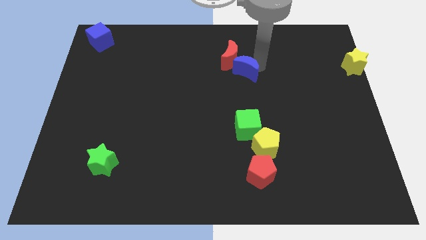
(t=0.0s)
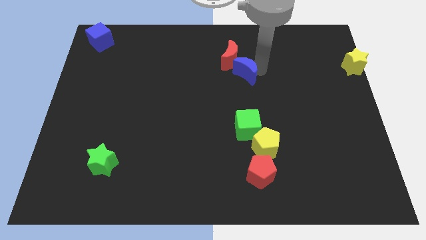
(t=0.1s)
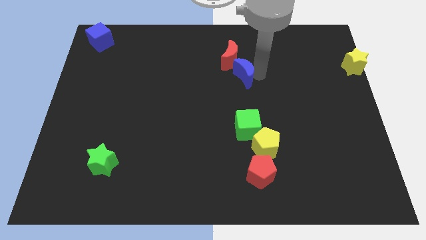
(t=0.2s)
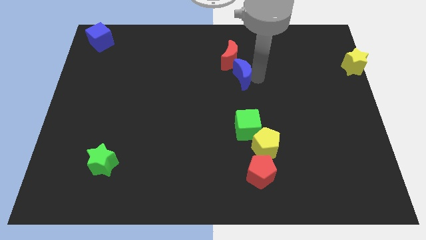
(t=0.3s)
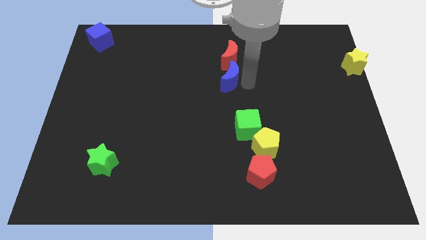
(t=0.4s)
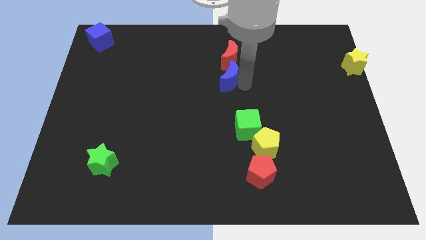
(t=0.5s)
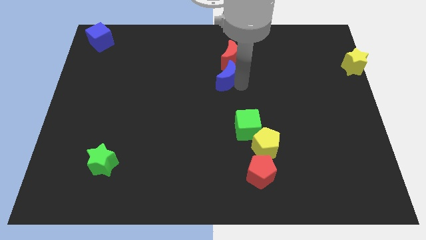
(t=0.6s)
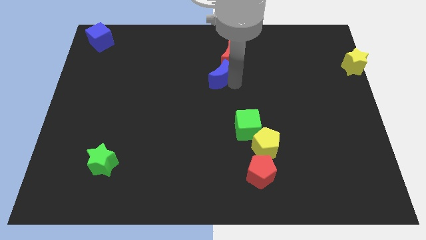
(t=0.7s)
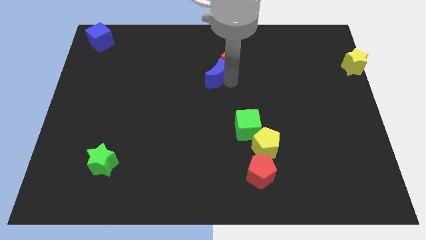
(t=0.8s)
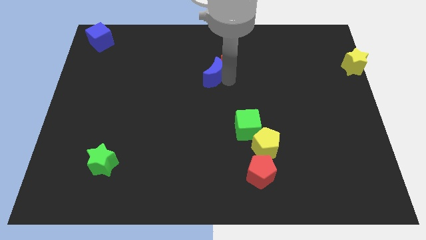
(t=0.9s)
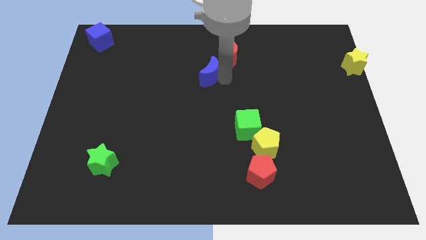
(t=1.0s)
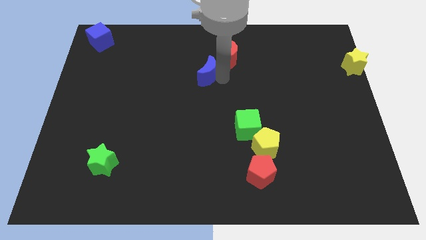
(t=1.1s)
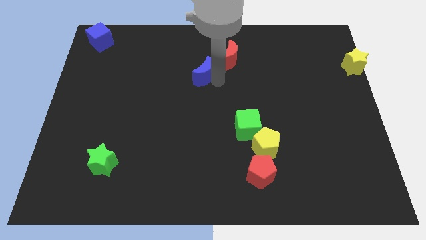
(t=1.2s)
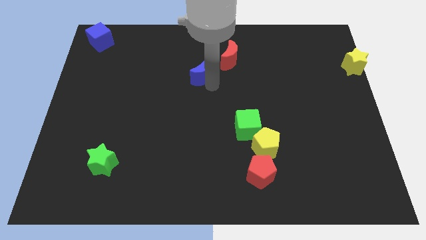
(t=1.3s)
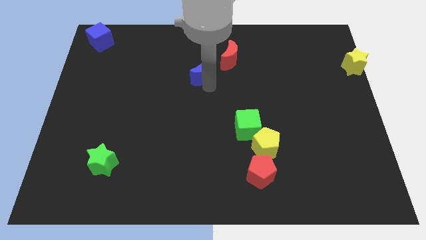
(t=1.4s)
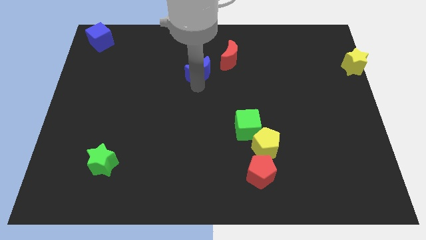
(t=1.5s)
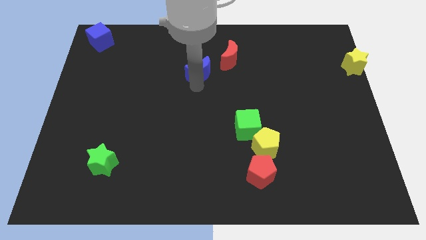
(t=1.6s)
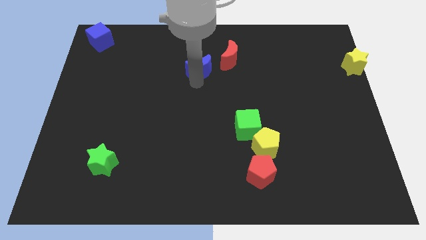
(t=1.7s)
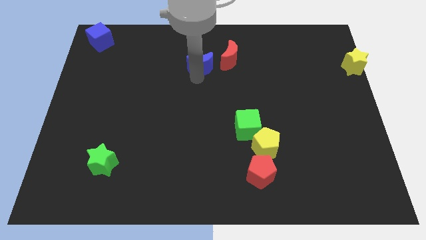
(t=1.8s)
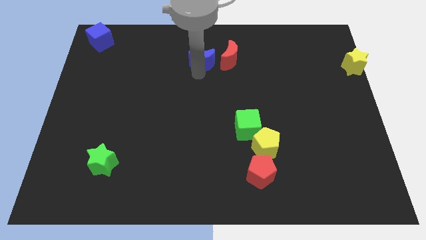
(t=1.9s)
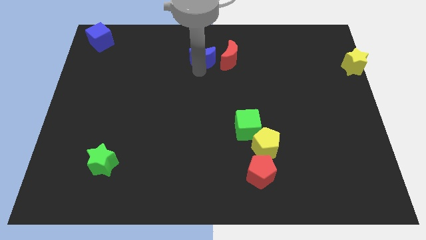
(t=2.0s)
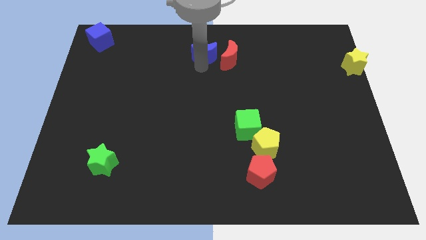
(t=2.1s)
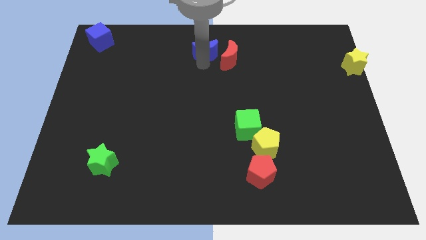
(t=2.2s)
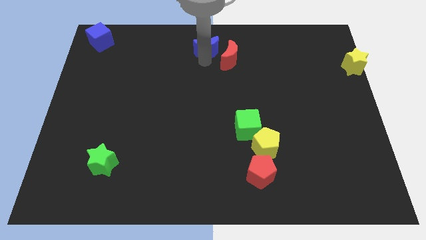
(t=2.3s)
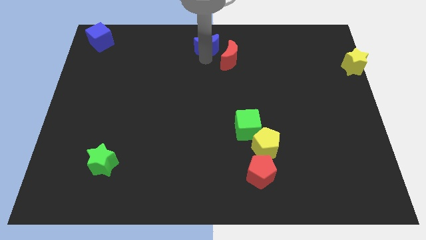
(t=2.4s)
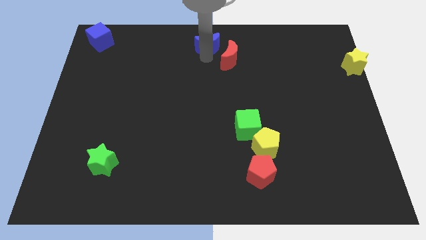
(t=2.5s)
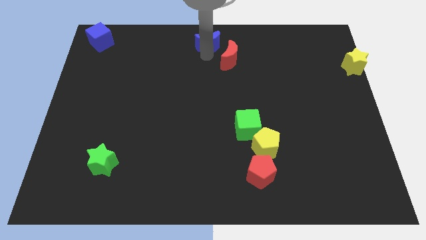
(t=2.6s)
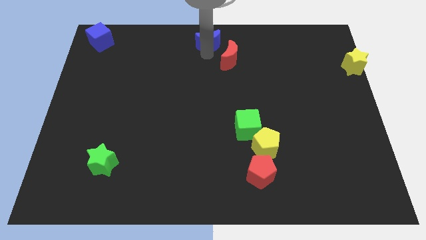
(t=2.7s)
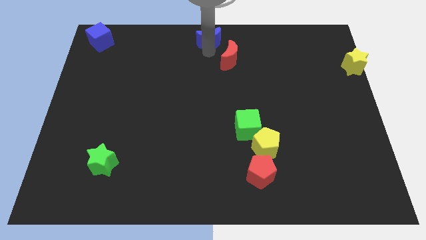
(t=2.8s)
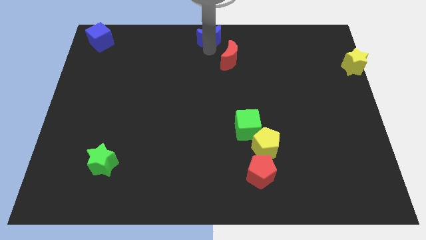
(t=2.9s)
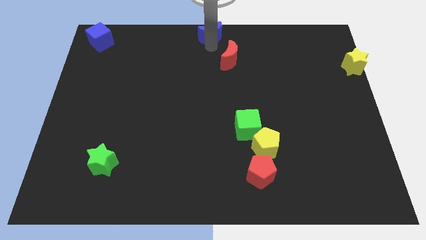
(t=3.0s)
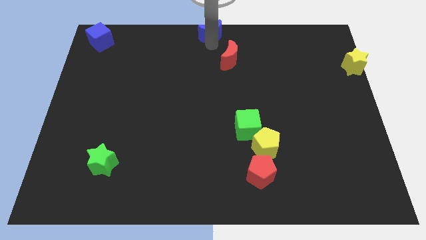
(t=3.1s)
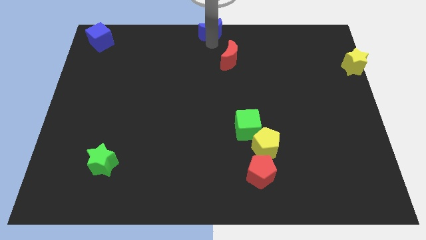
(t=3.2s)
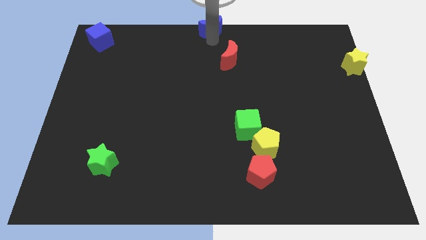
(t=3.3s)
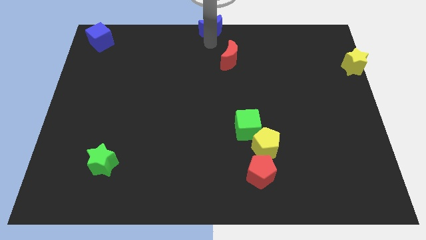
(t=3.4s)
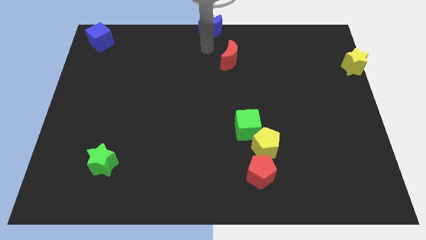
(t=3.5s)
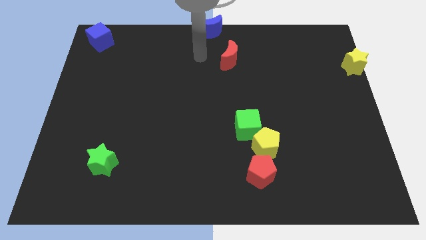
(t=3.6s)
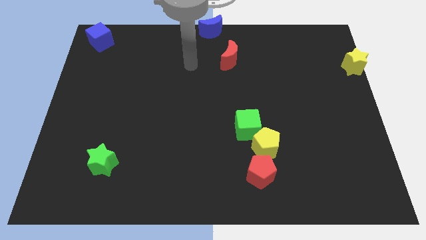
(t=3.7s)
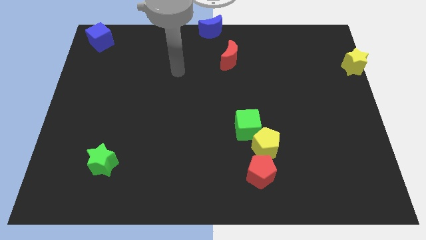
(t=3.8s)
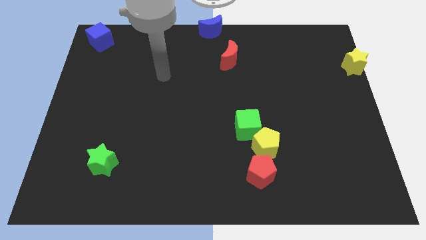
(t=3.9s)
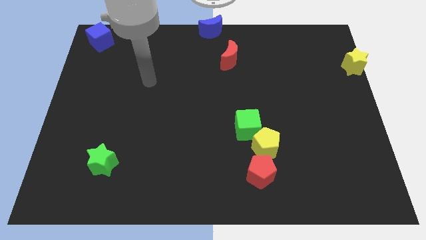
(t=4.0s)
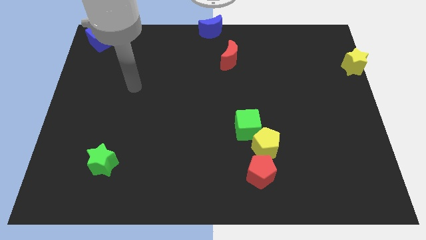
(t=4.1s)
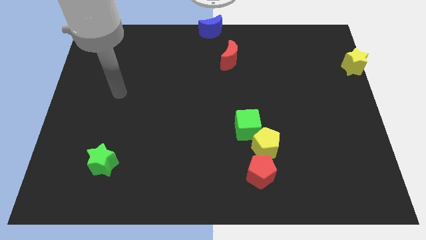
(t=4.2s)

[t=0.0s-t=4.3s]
place blue cube at the top center of the board

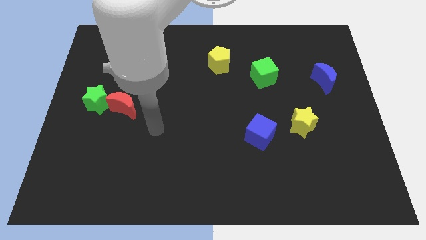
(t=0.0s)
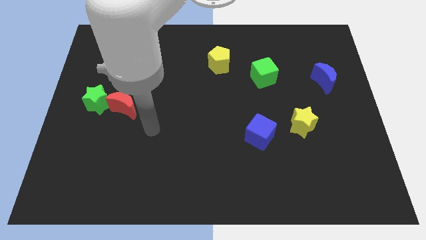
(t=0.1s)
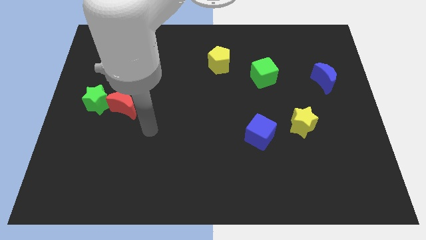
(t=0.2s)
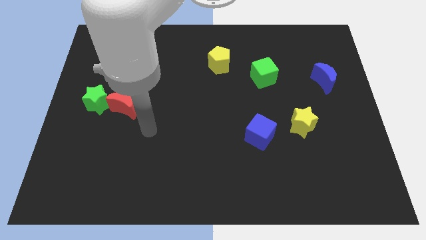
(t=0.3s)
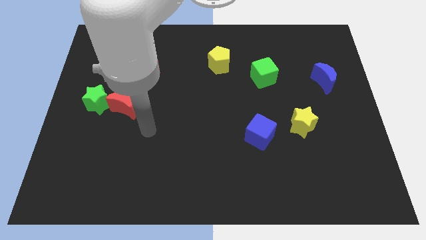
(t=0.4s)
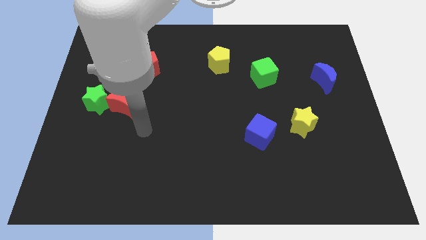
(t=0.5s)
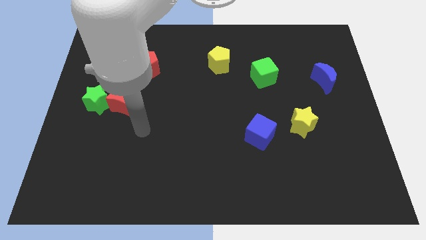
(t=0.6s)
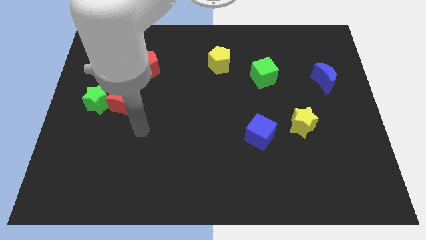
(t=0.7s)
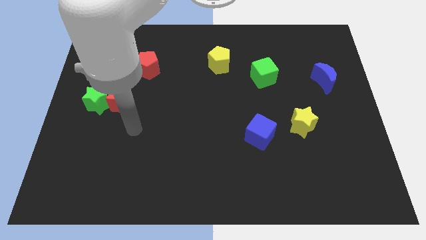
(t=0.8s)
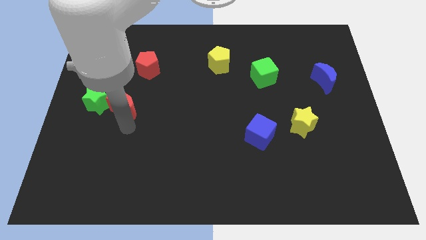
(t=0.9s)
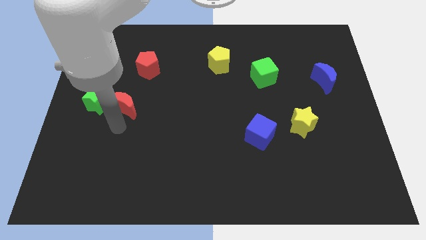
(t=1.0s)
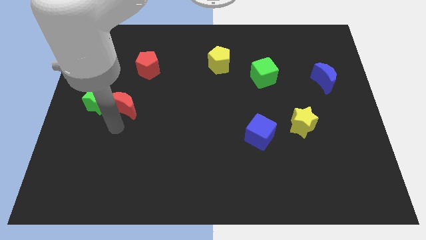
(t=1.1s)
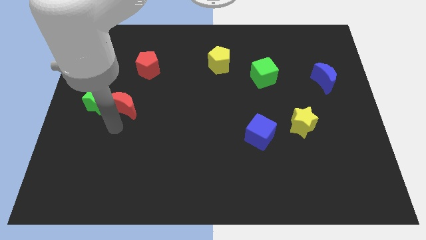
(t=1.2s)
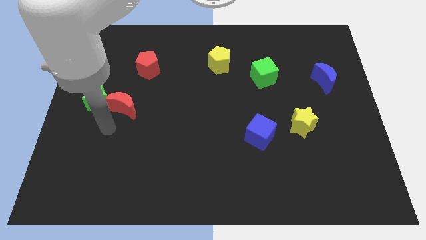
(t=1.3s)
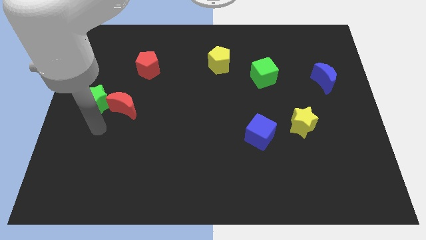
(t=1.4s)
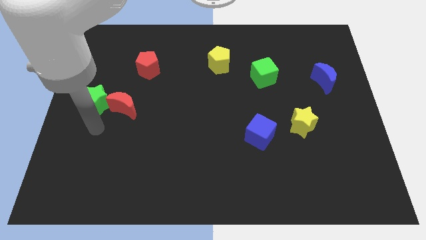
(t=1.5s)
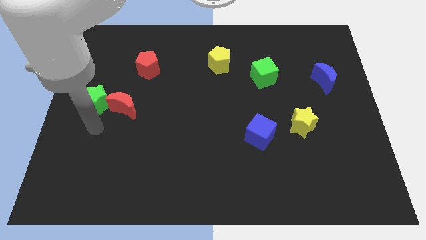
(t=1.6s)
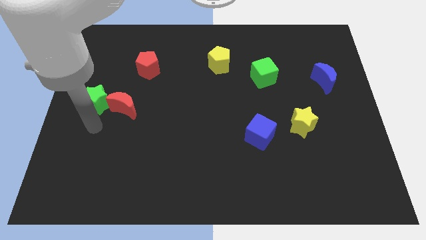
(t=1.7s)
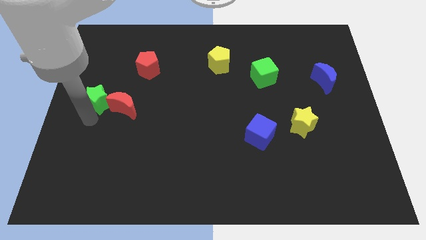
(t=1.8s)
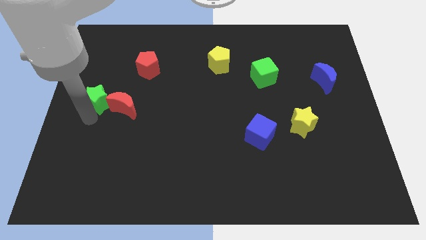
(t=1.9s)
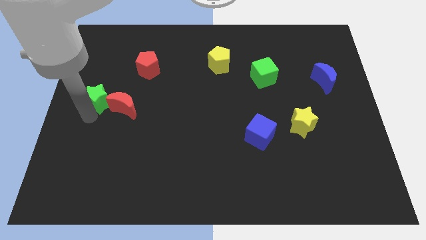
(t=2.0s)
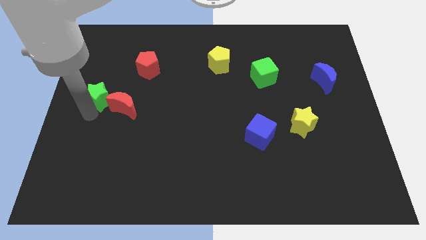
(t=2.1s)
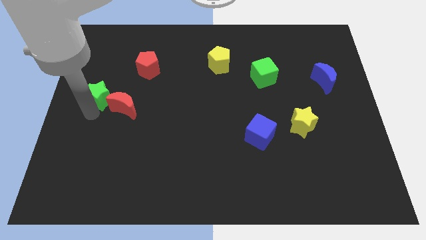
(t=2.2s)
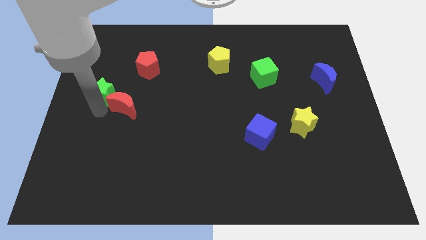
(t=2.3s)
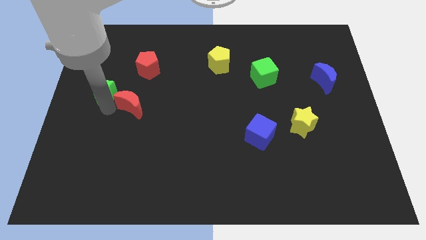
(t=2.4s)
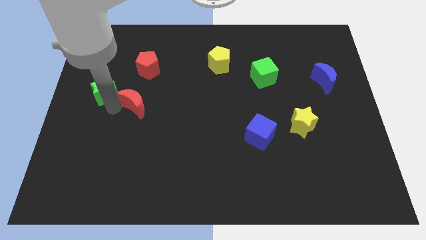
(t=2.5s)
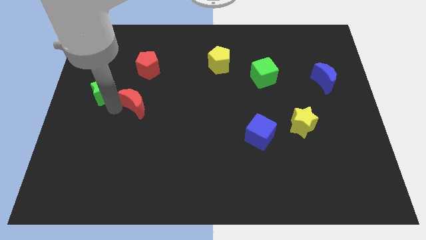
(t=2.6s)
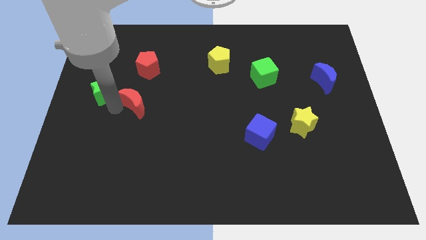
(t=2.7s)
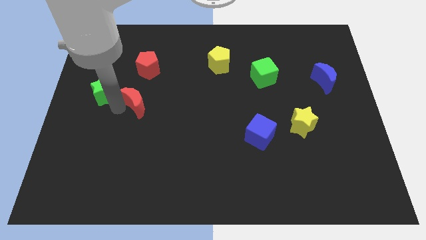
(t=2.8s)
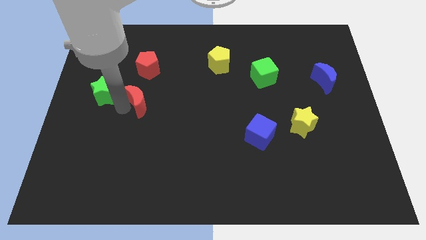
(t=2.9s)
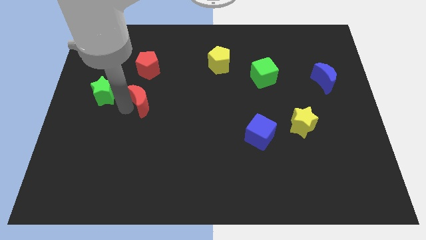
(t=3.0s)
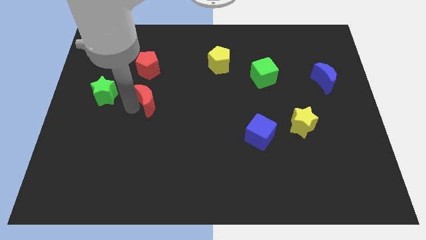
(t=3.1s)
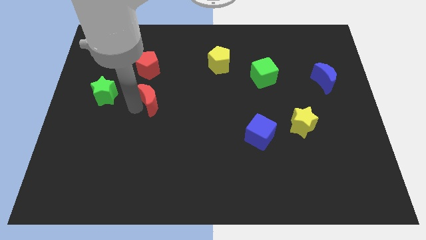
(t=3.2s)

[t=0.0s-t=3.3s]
slightly move the red crescent

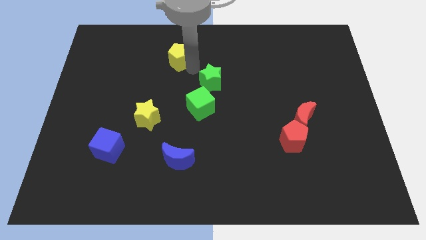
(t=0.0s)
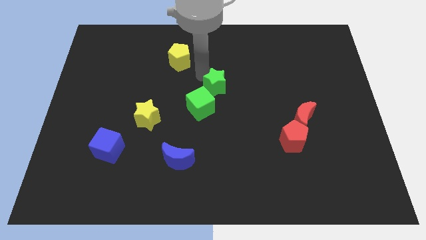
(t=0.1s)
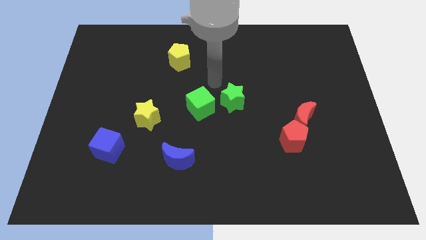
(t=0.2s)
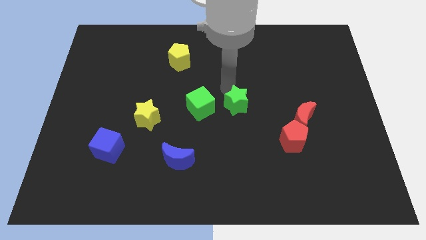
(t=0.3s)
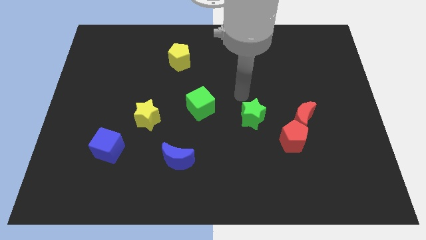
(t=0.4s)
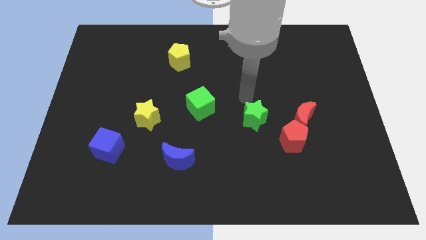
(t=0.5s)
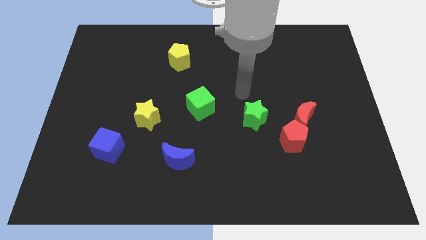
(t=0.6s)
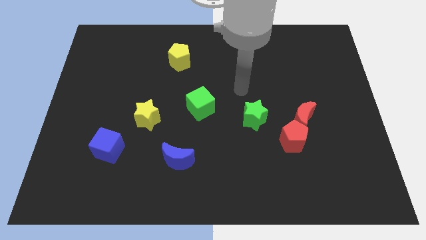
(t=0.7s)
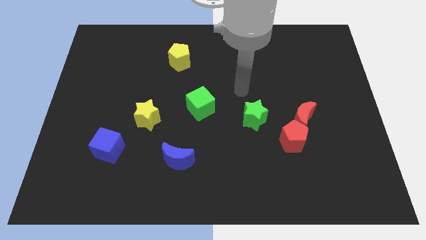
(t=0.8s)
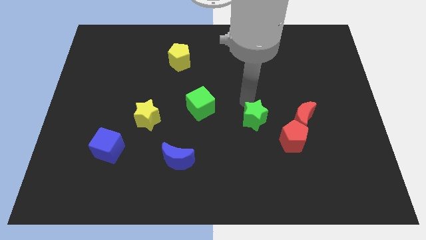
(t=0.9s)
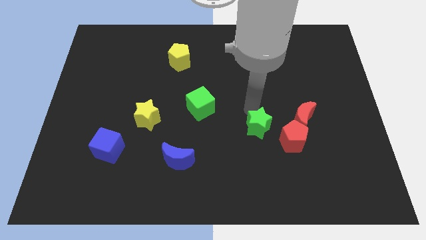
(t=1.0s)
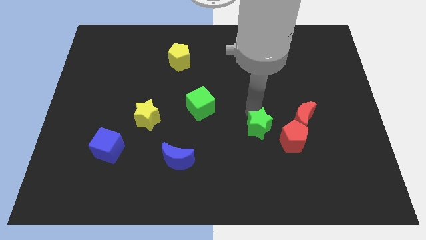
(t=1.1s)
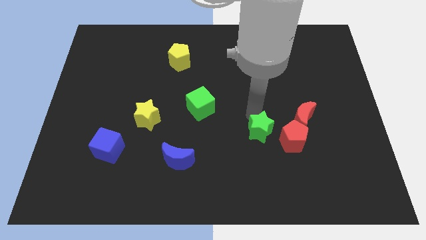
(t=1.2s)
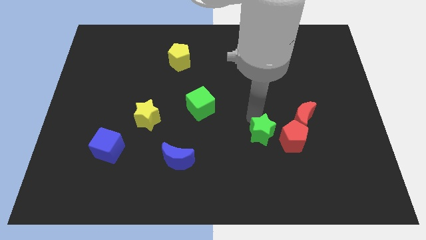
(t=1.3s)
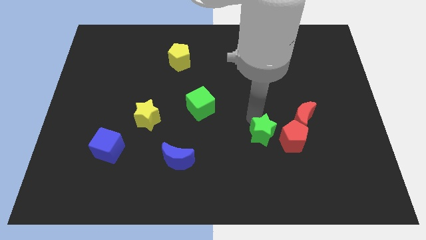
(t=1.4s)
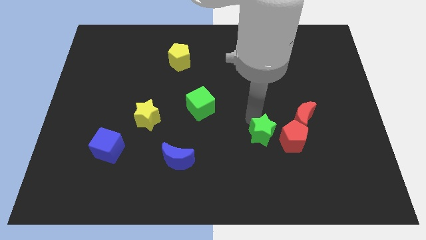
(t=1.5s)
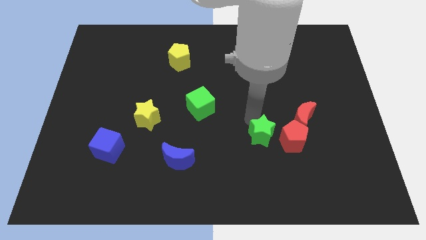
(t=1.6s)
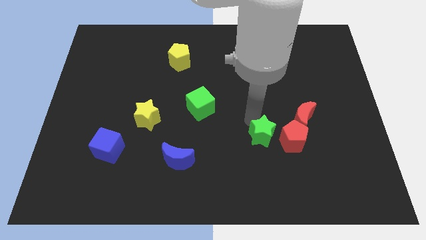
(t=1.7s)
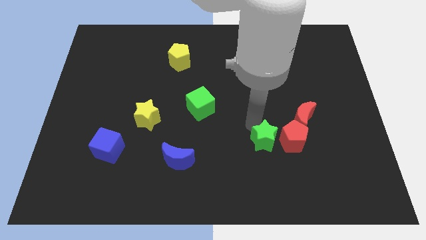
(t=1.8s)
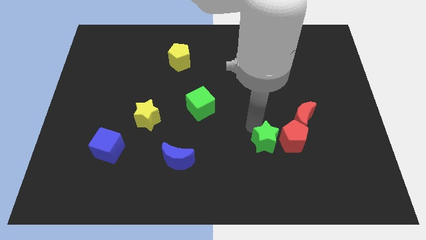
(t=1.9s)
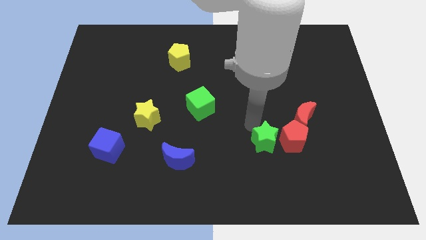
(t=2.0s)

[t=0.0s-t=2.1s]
push the green star to the left of the red pentagon
